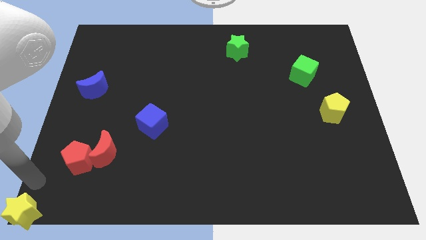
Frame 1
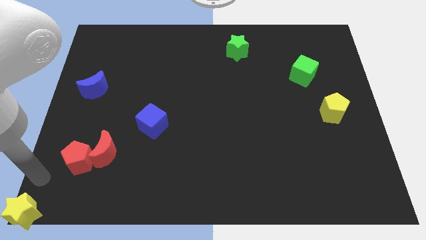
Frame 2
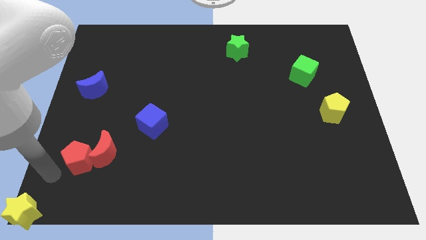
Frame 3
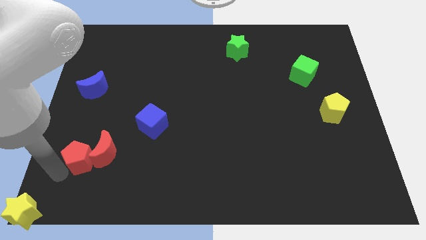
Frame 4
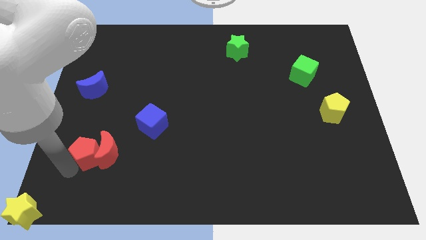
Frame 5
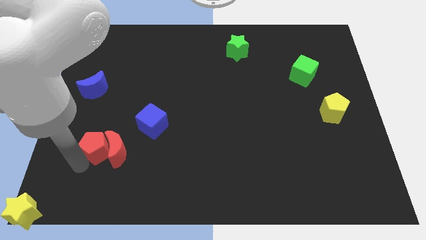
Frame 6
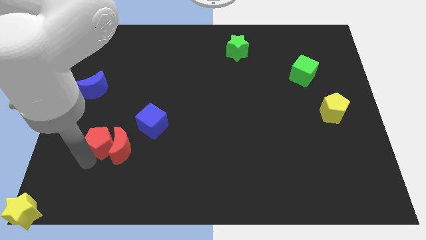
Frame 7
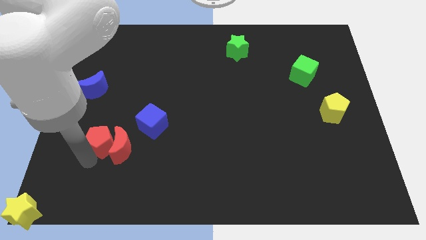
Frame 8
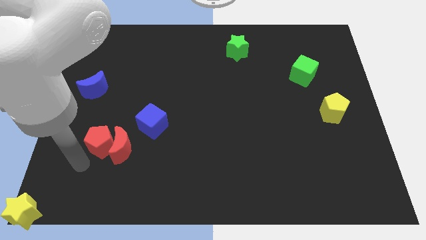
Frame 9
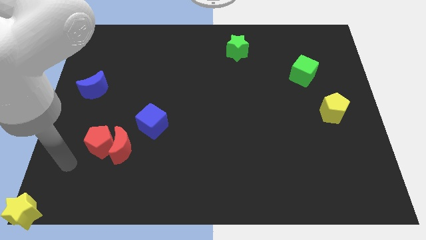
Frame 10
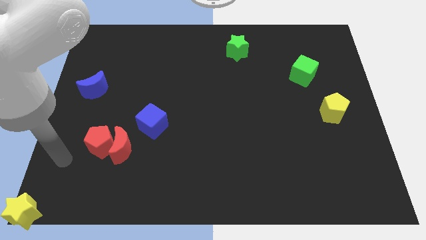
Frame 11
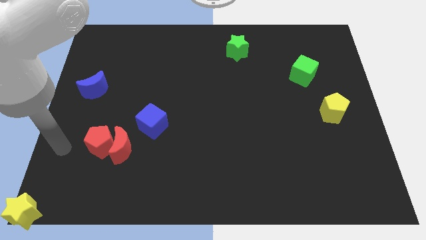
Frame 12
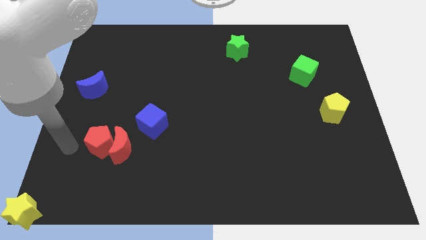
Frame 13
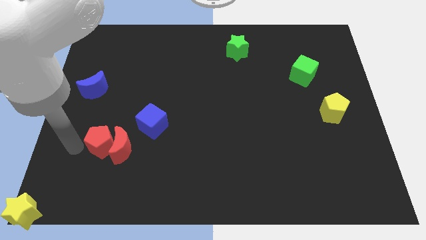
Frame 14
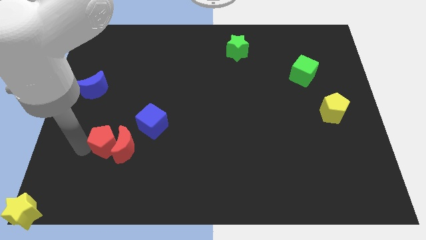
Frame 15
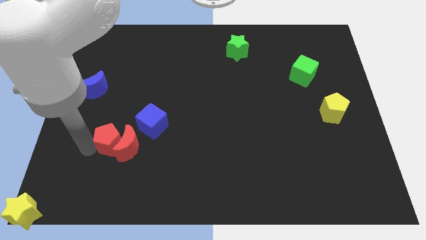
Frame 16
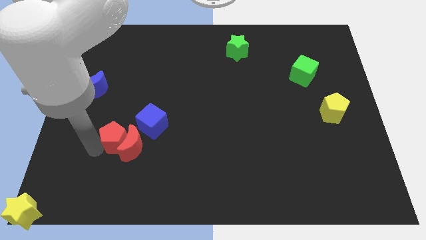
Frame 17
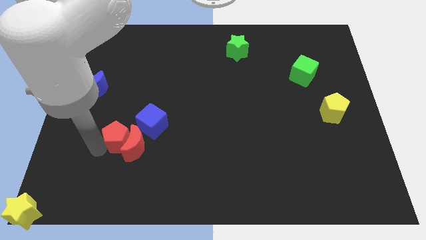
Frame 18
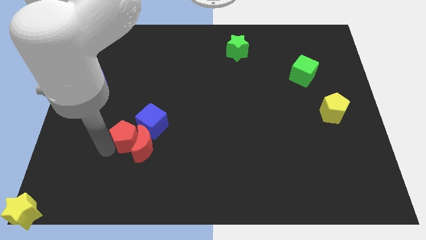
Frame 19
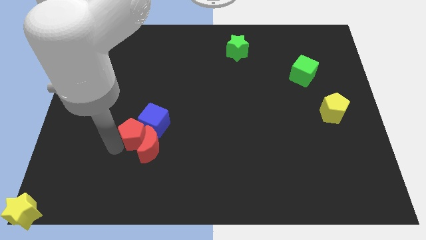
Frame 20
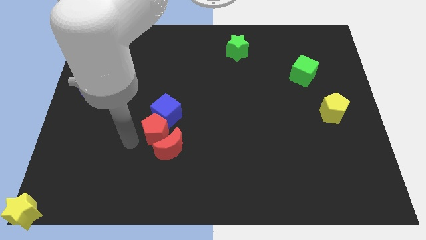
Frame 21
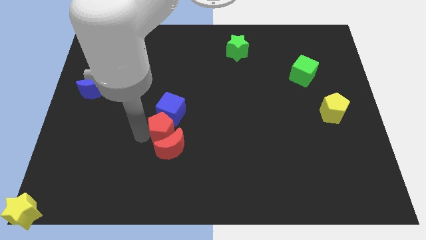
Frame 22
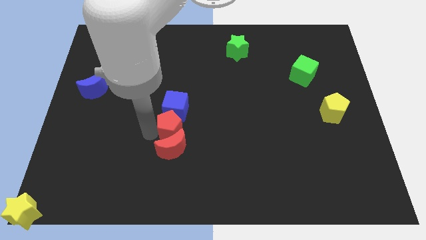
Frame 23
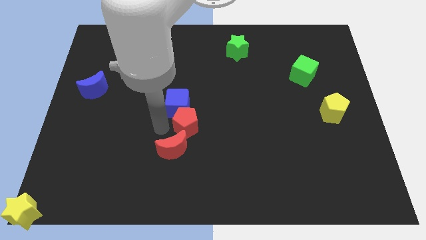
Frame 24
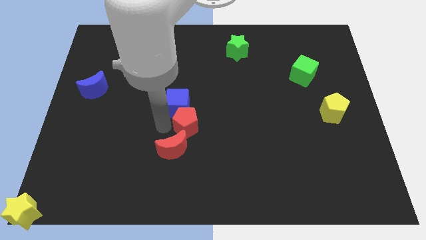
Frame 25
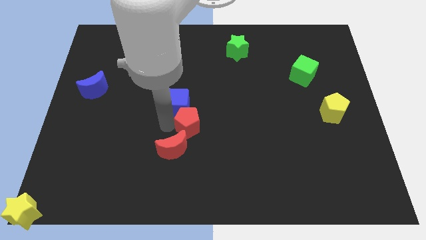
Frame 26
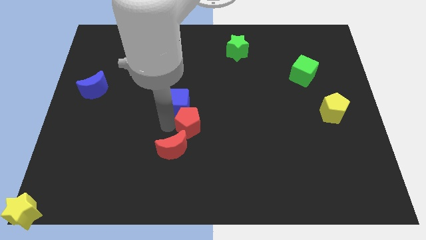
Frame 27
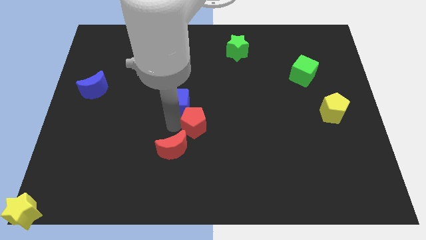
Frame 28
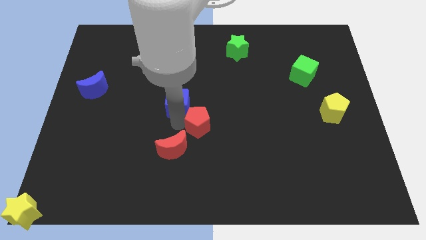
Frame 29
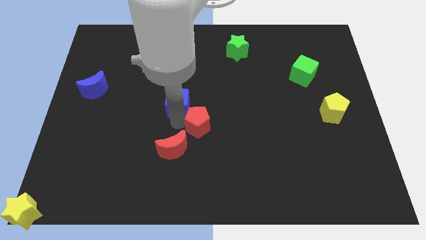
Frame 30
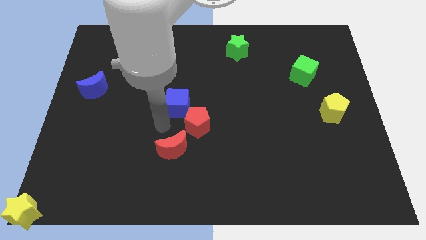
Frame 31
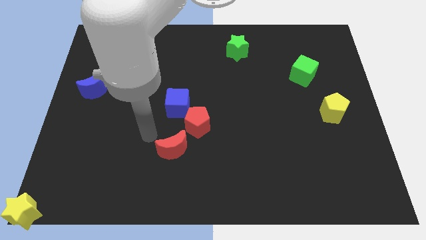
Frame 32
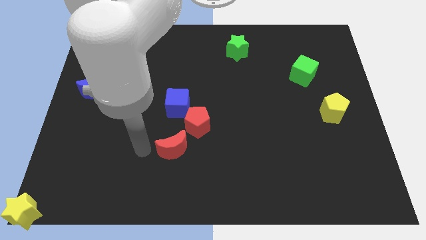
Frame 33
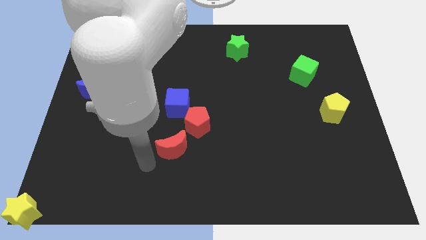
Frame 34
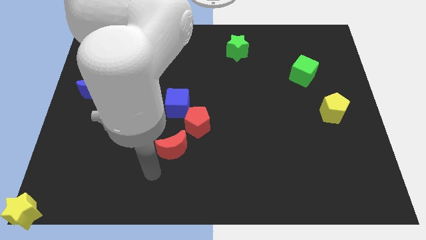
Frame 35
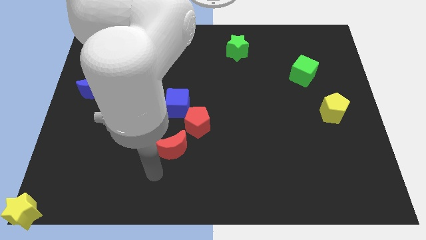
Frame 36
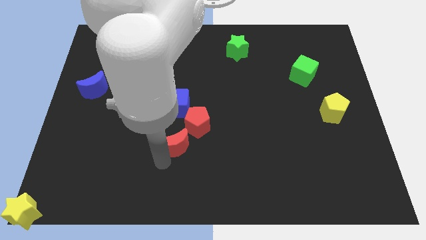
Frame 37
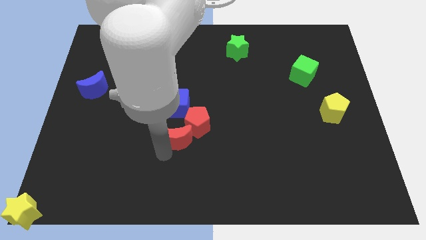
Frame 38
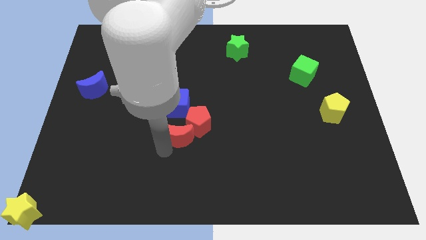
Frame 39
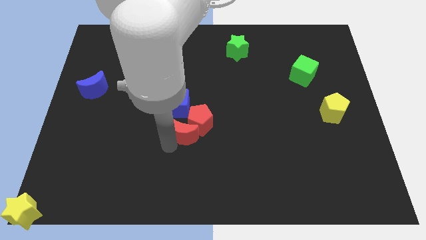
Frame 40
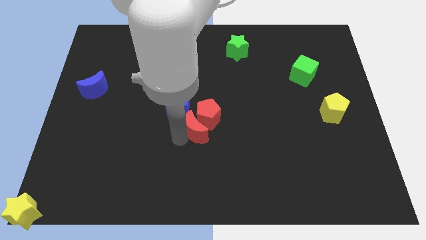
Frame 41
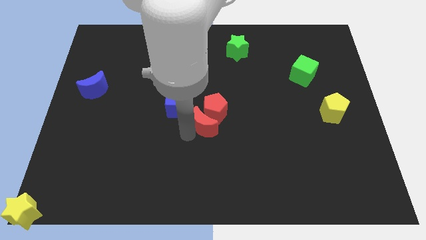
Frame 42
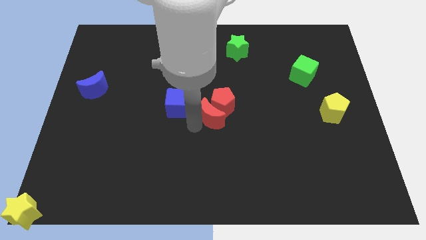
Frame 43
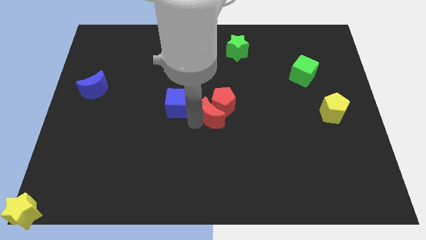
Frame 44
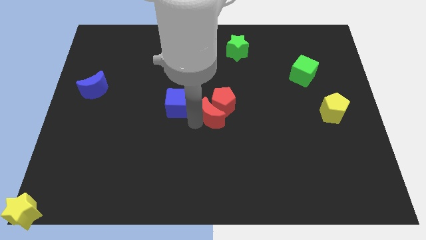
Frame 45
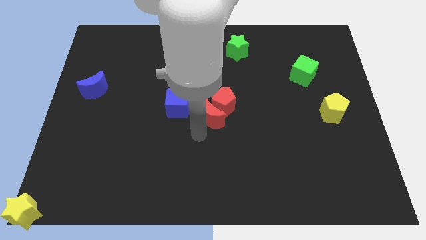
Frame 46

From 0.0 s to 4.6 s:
place red blocks to the right of the blue cube

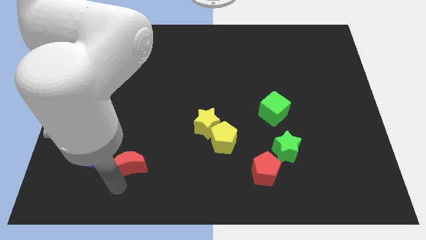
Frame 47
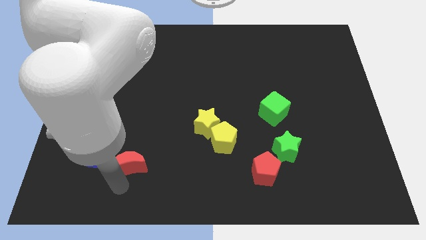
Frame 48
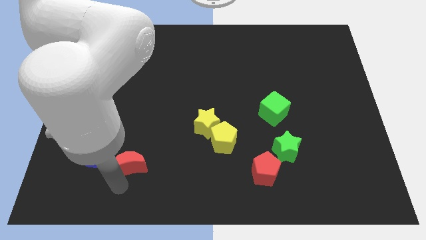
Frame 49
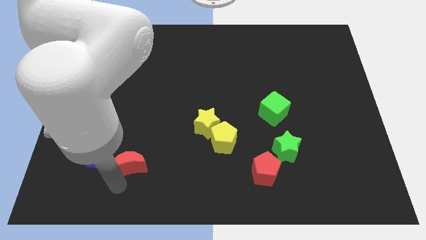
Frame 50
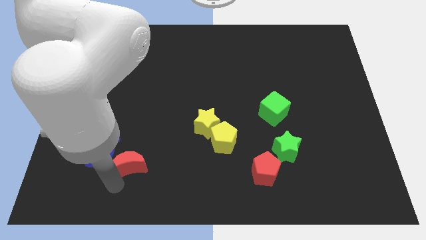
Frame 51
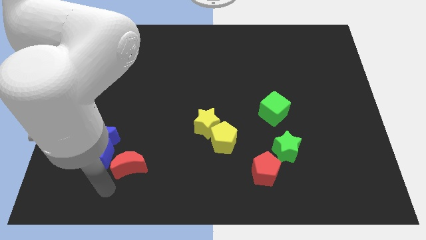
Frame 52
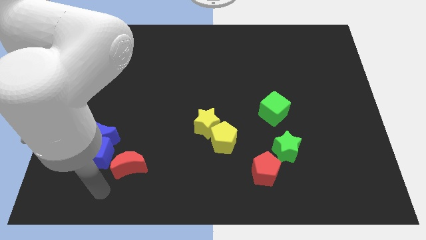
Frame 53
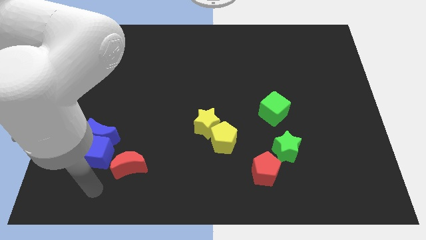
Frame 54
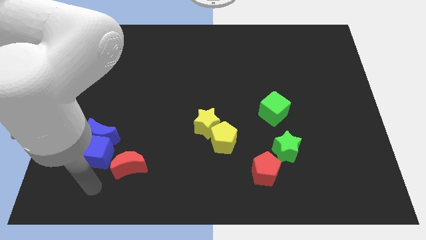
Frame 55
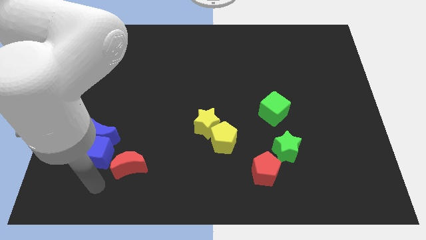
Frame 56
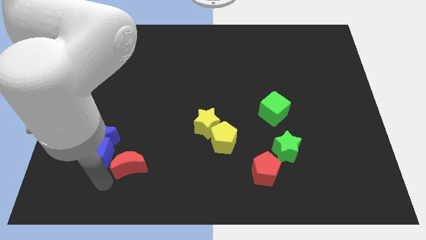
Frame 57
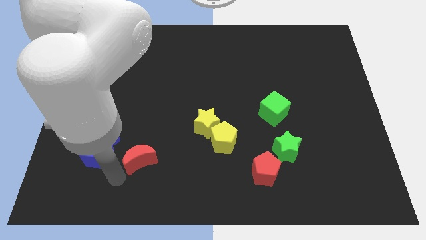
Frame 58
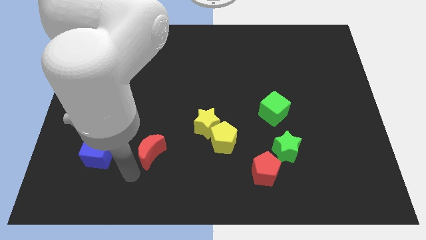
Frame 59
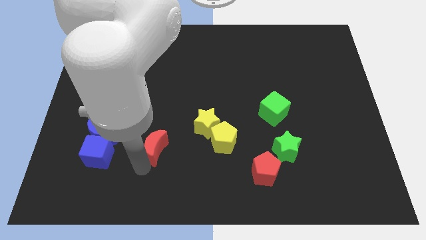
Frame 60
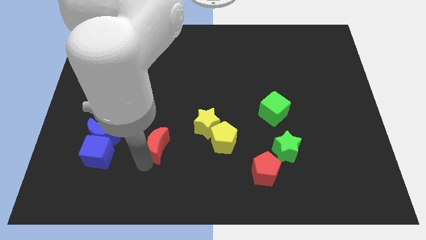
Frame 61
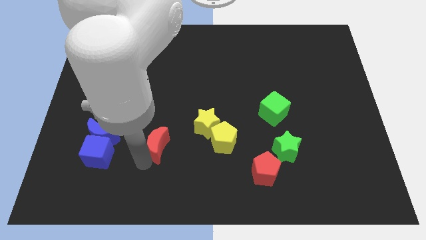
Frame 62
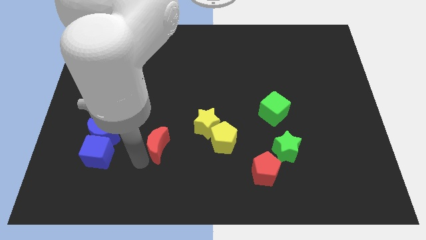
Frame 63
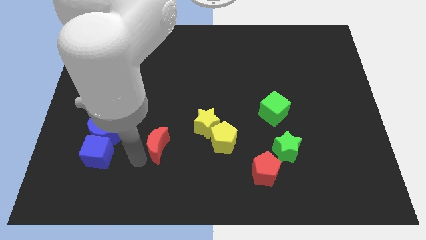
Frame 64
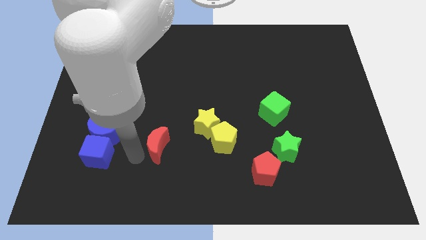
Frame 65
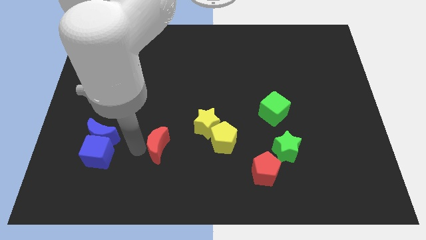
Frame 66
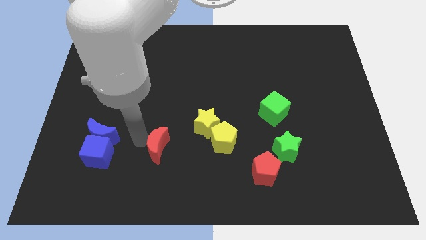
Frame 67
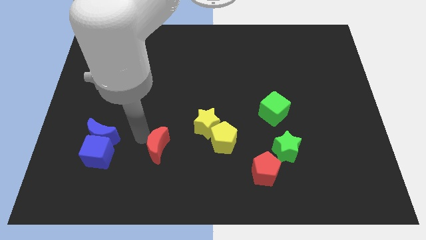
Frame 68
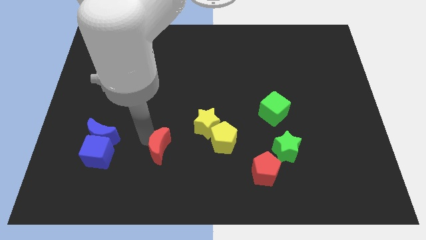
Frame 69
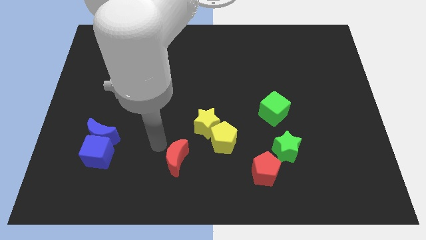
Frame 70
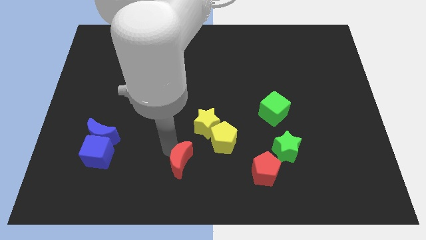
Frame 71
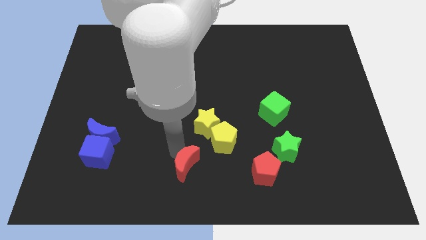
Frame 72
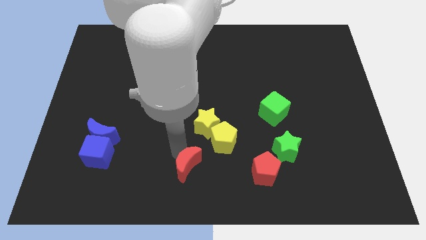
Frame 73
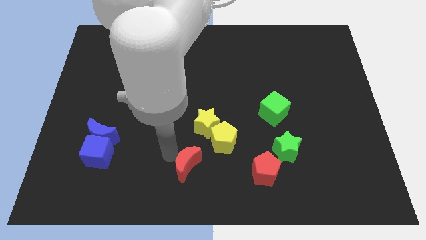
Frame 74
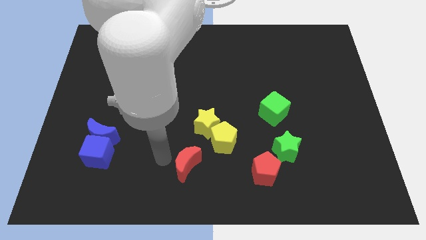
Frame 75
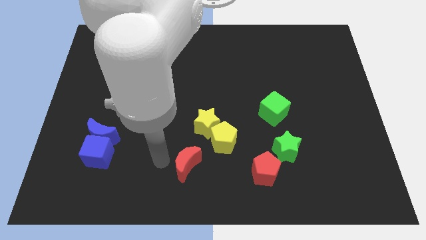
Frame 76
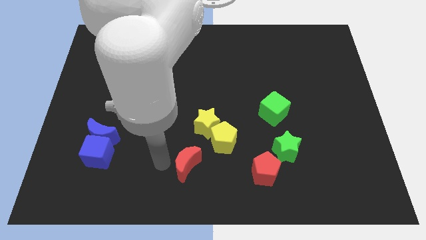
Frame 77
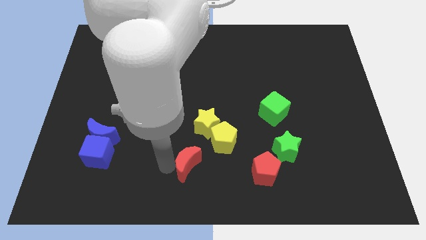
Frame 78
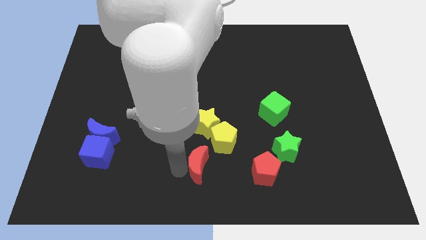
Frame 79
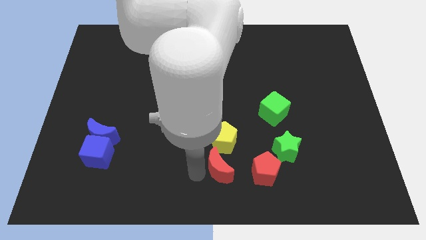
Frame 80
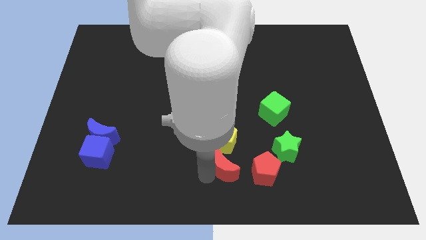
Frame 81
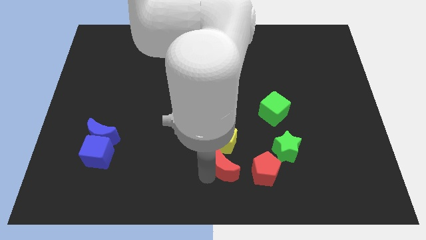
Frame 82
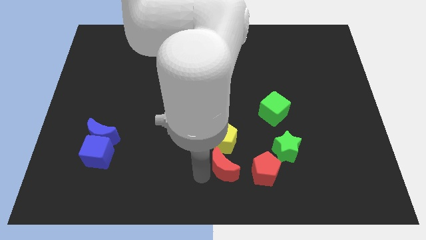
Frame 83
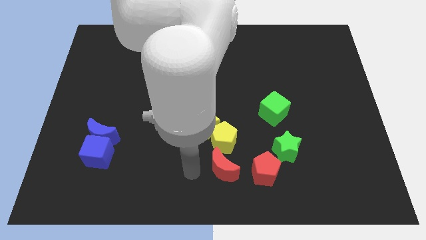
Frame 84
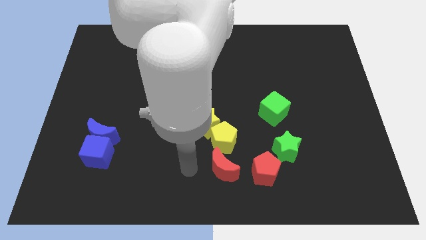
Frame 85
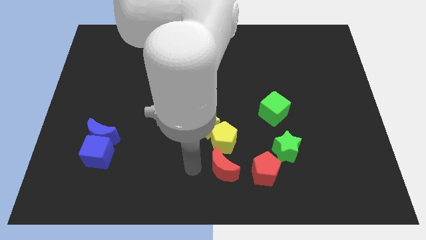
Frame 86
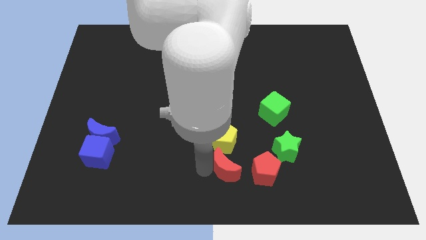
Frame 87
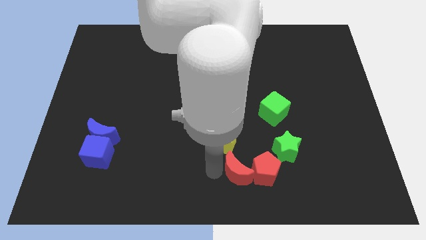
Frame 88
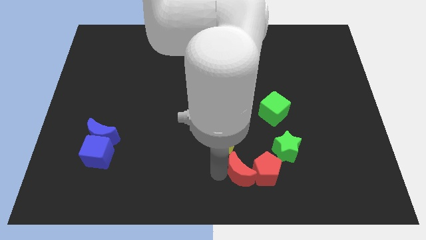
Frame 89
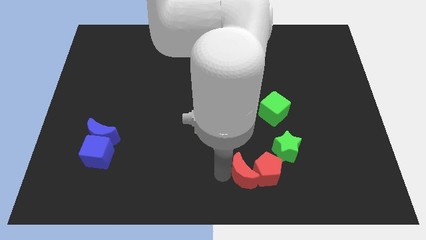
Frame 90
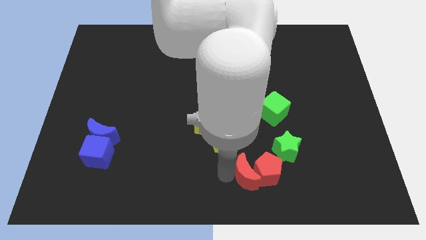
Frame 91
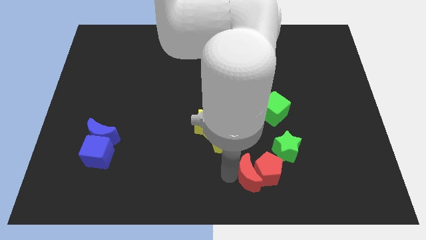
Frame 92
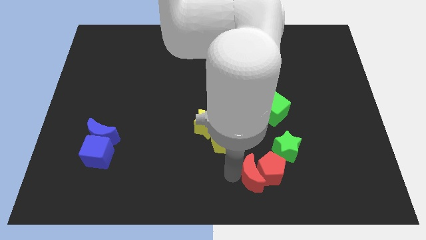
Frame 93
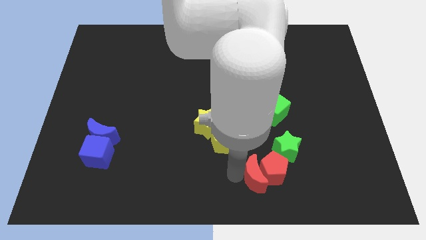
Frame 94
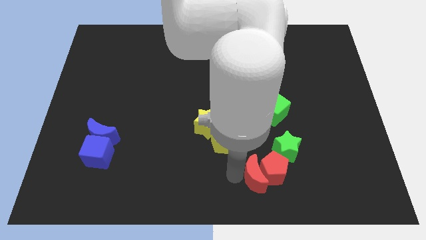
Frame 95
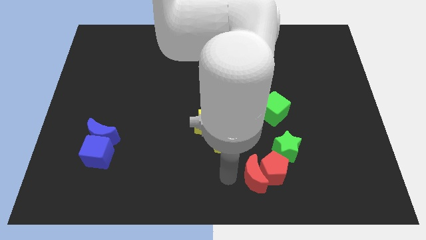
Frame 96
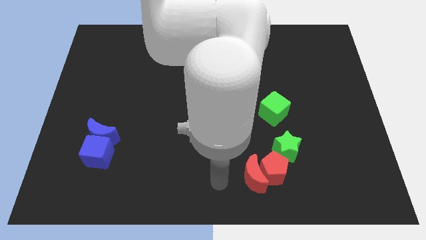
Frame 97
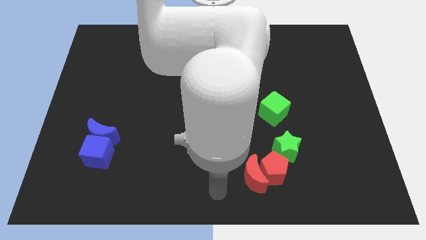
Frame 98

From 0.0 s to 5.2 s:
push the red moon into the red pentagon
